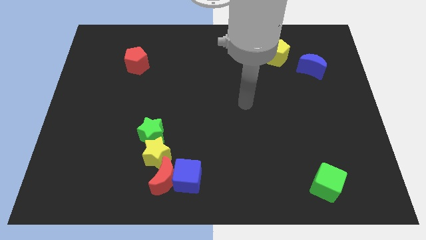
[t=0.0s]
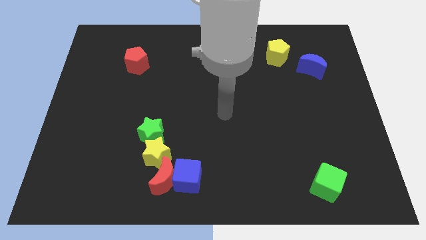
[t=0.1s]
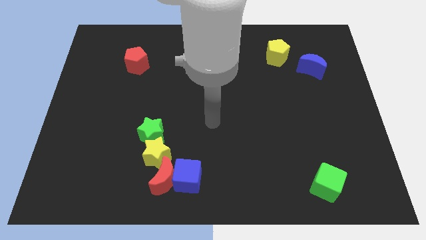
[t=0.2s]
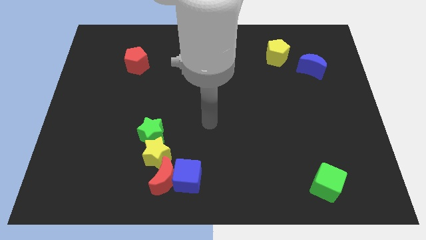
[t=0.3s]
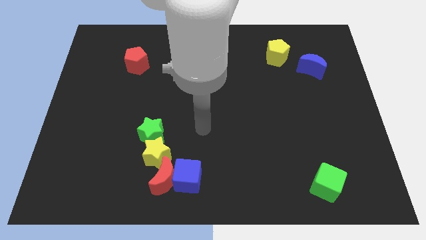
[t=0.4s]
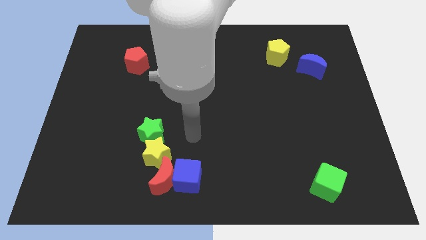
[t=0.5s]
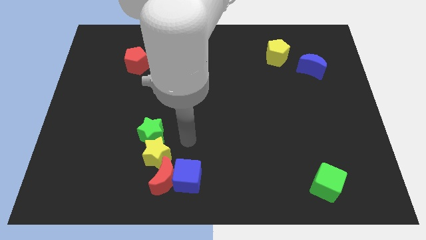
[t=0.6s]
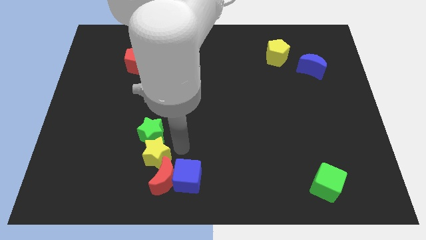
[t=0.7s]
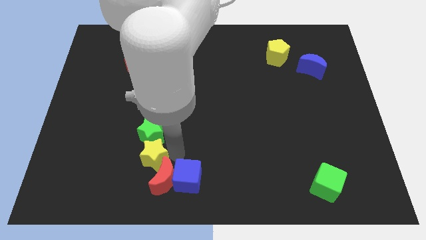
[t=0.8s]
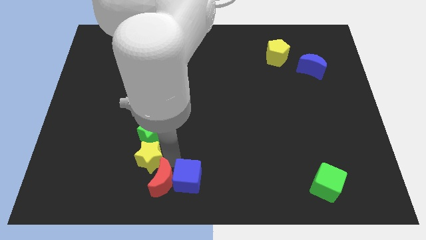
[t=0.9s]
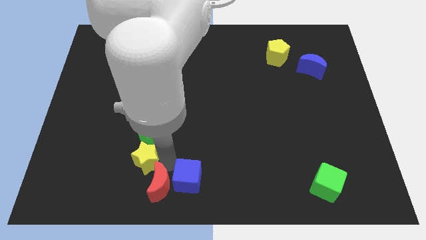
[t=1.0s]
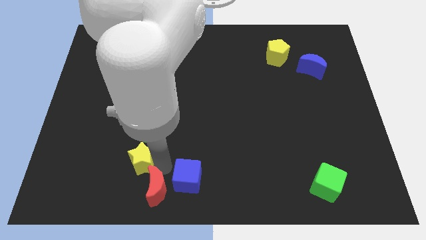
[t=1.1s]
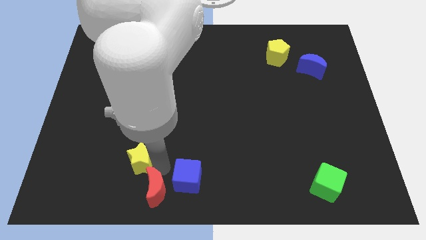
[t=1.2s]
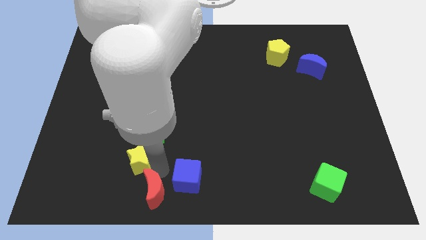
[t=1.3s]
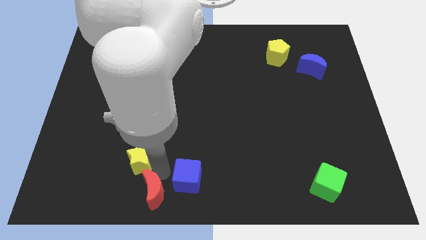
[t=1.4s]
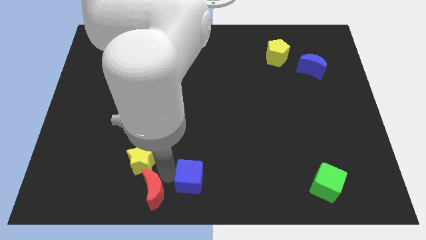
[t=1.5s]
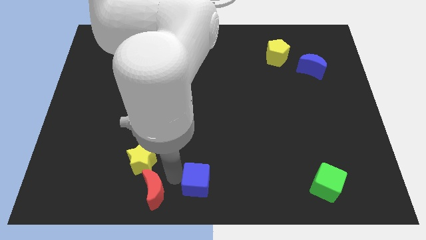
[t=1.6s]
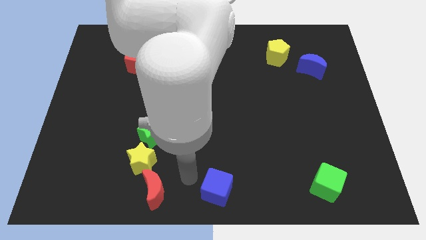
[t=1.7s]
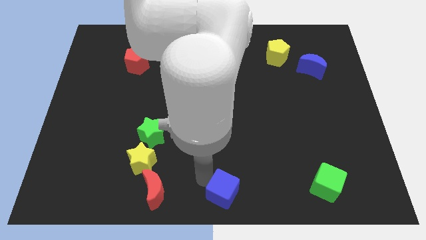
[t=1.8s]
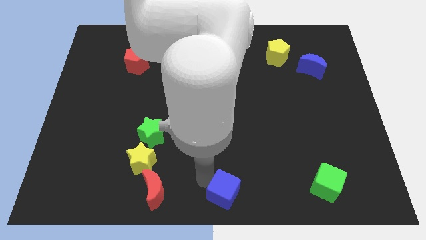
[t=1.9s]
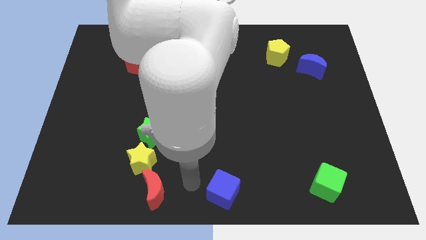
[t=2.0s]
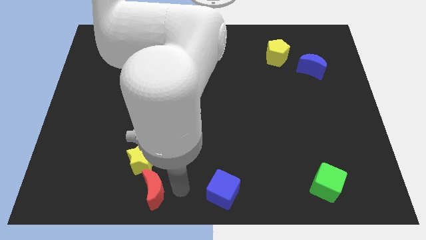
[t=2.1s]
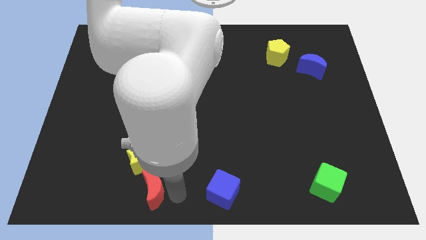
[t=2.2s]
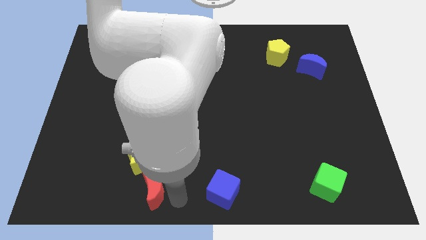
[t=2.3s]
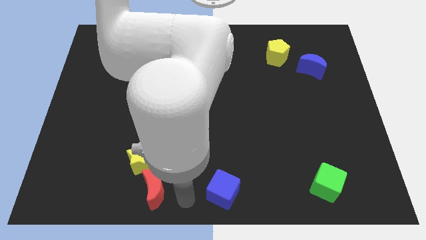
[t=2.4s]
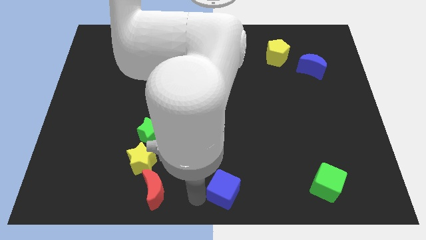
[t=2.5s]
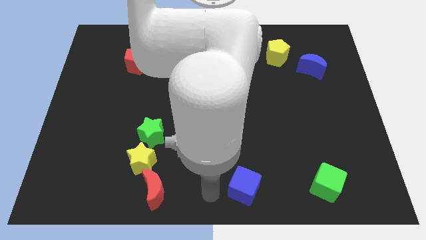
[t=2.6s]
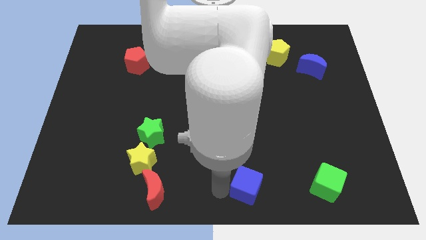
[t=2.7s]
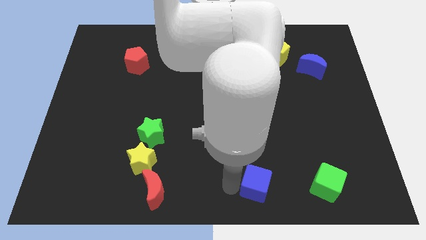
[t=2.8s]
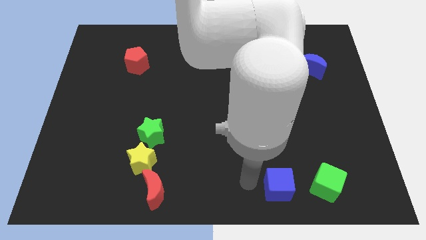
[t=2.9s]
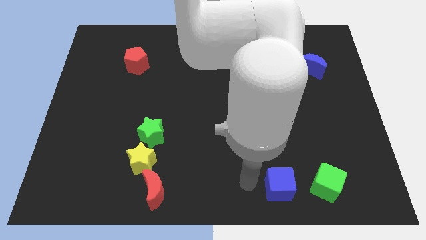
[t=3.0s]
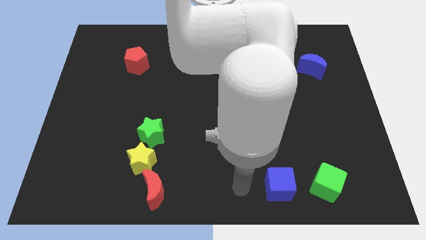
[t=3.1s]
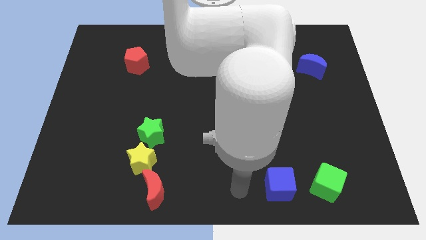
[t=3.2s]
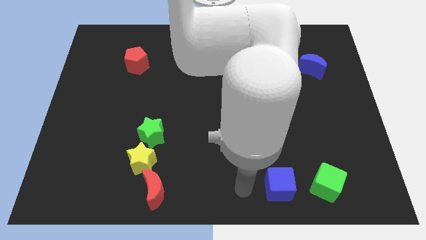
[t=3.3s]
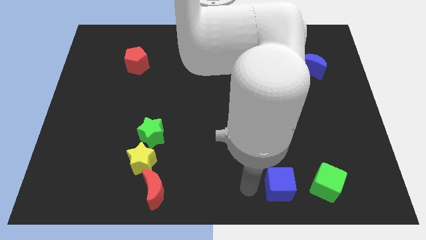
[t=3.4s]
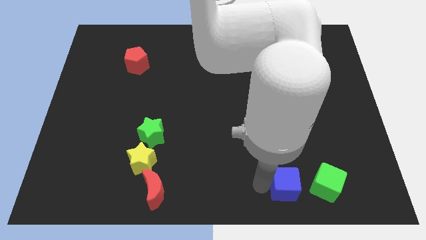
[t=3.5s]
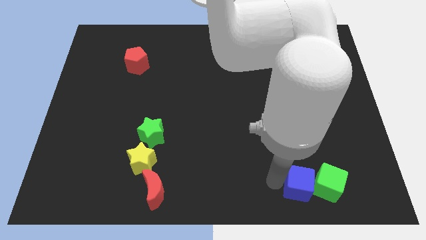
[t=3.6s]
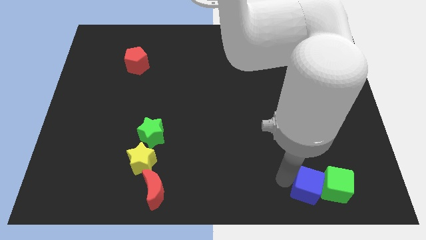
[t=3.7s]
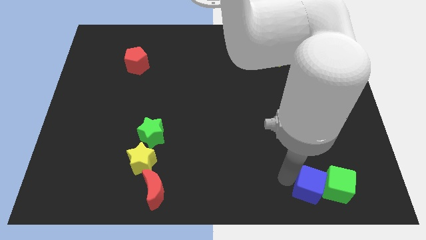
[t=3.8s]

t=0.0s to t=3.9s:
put the blue cube close to the green cube

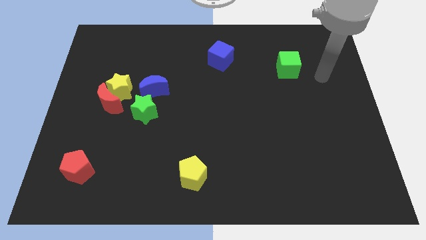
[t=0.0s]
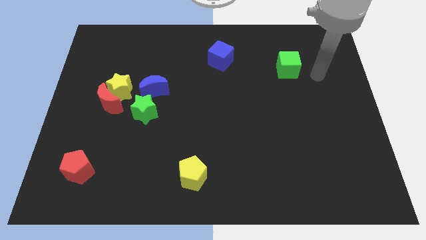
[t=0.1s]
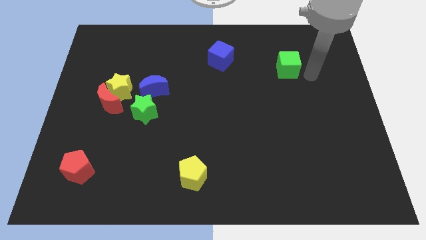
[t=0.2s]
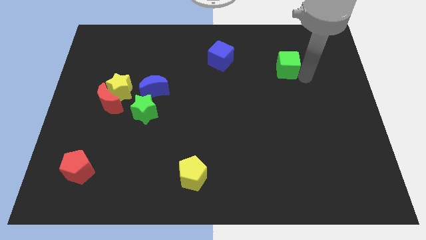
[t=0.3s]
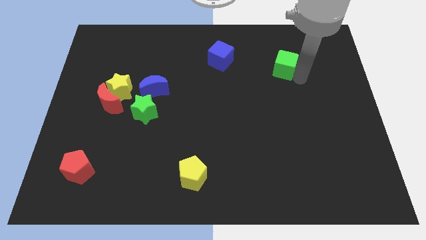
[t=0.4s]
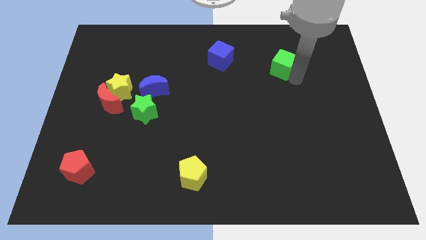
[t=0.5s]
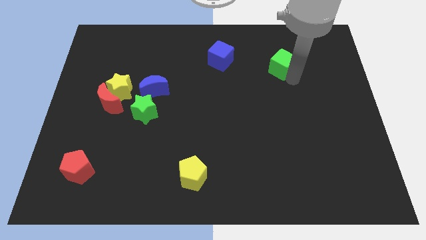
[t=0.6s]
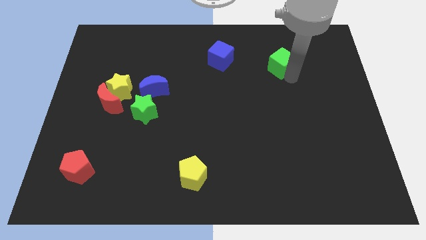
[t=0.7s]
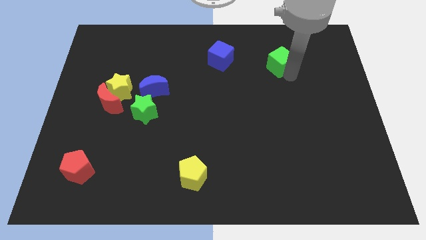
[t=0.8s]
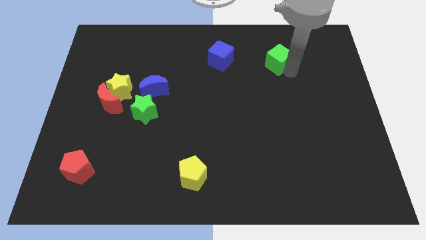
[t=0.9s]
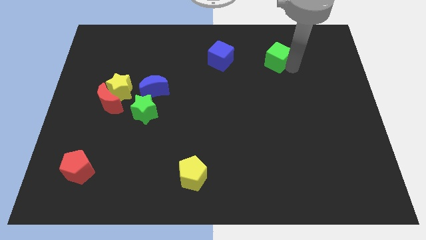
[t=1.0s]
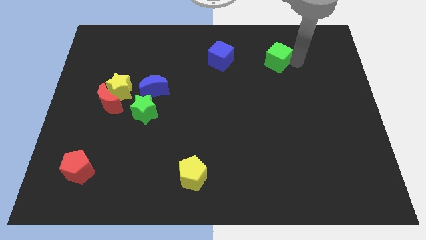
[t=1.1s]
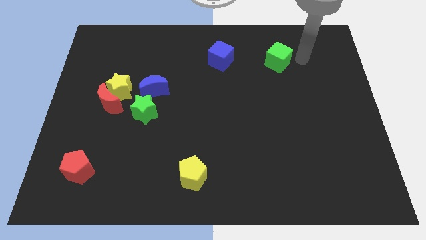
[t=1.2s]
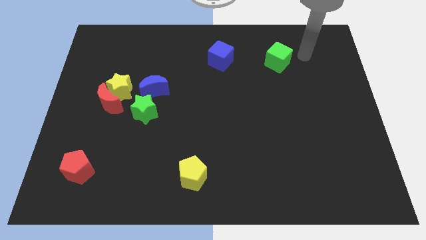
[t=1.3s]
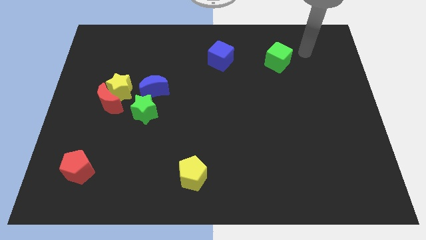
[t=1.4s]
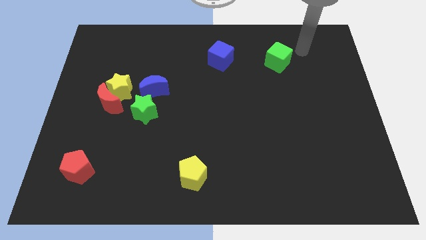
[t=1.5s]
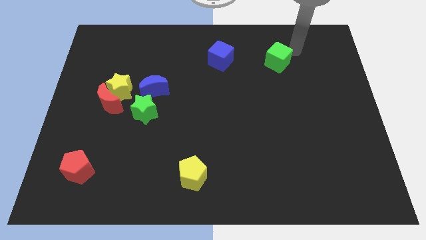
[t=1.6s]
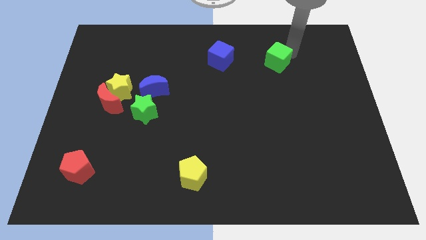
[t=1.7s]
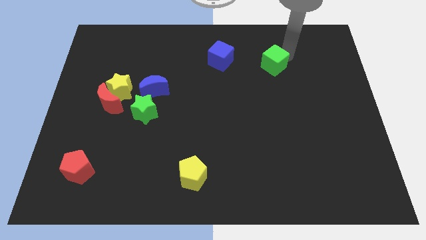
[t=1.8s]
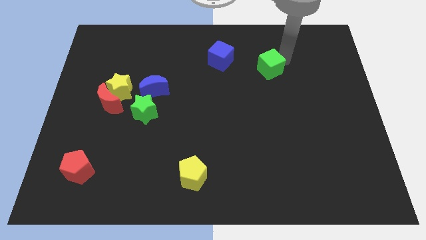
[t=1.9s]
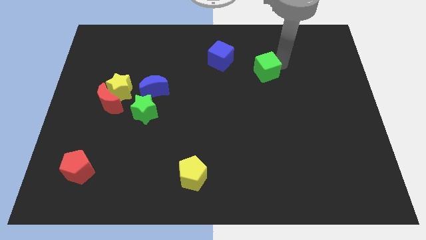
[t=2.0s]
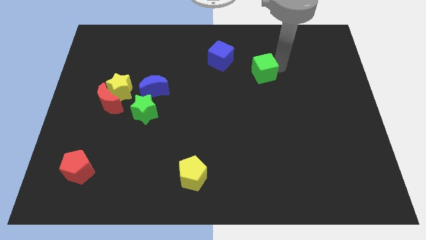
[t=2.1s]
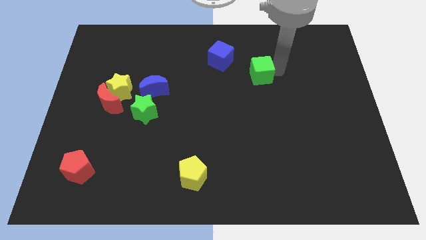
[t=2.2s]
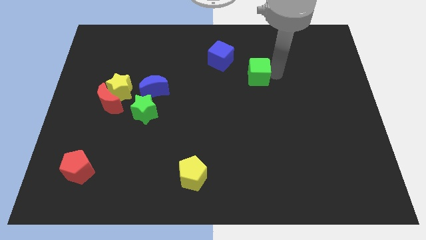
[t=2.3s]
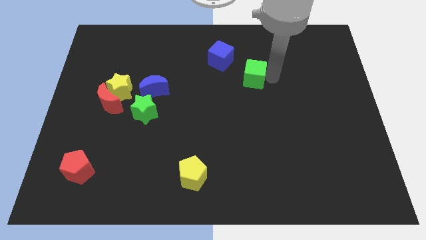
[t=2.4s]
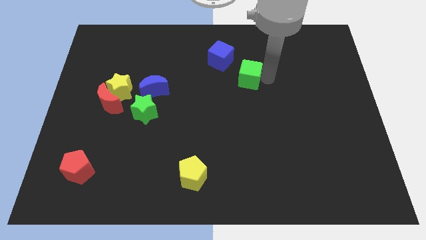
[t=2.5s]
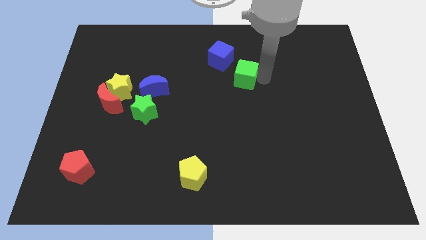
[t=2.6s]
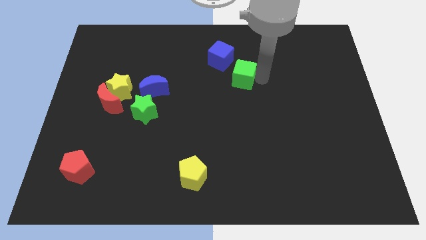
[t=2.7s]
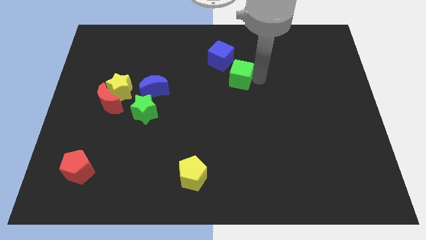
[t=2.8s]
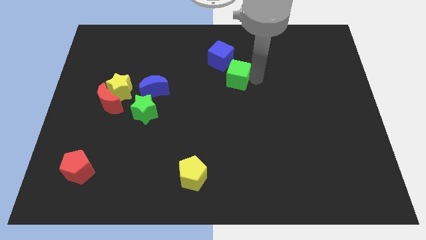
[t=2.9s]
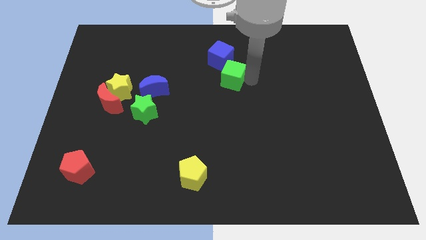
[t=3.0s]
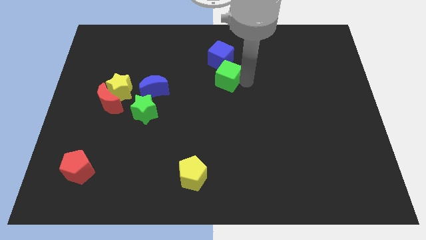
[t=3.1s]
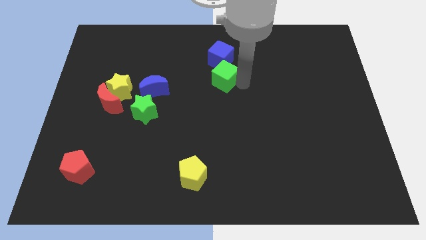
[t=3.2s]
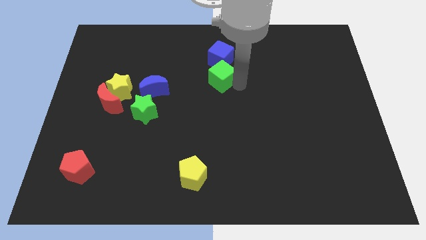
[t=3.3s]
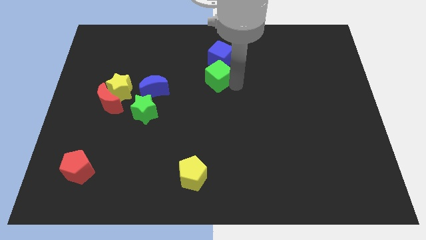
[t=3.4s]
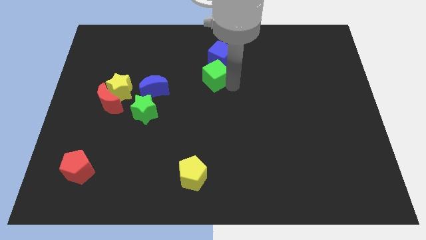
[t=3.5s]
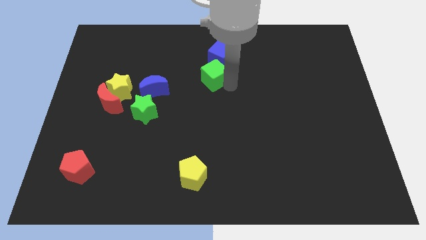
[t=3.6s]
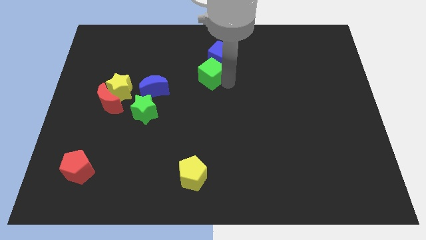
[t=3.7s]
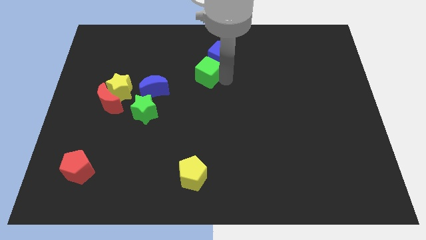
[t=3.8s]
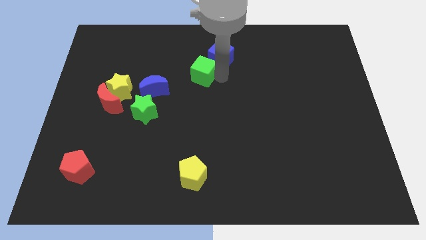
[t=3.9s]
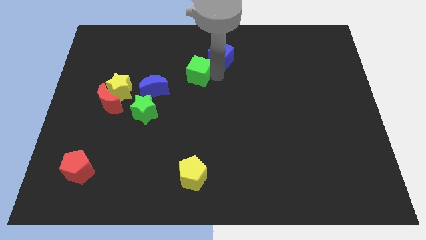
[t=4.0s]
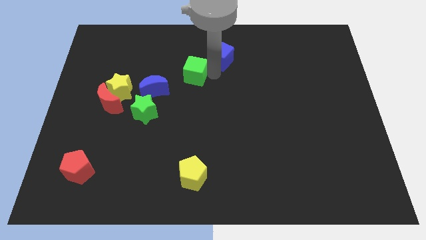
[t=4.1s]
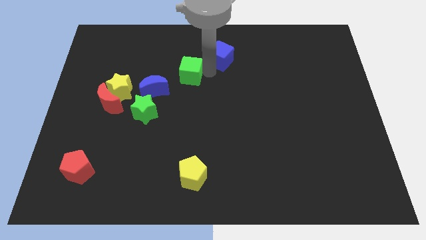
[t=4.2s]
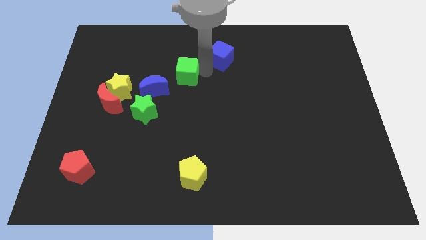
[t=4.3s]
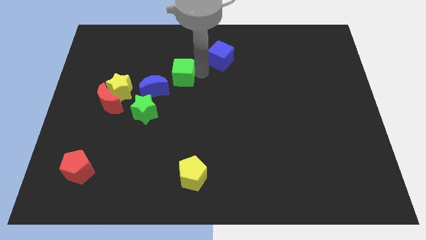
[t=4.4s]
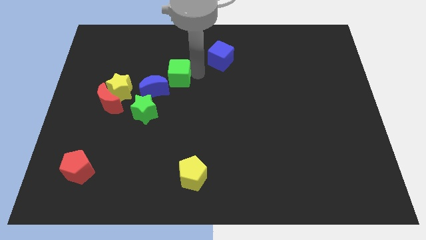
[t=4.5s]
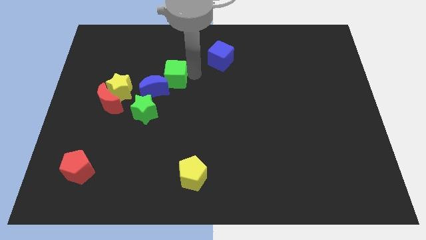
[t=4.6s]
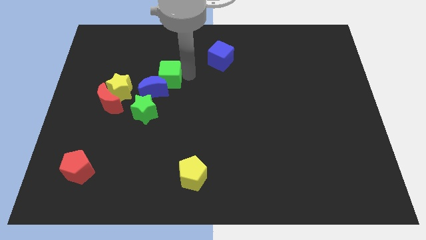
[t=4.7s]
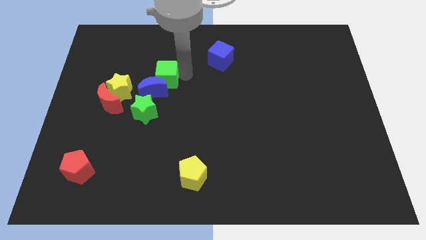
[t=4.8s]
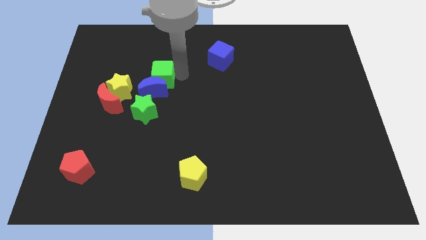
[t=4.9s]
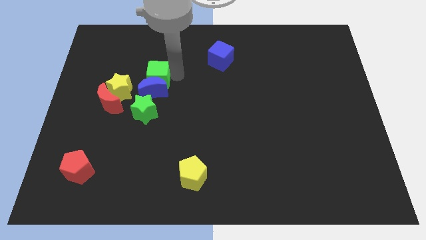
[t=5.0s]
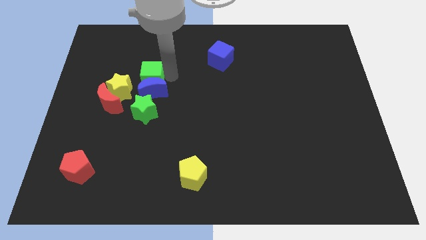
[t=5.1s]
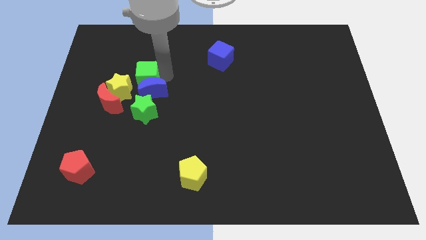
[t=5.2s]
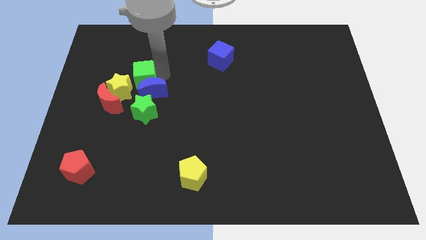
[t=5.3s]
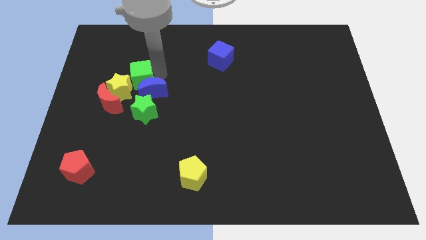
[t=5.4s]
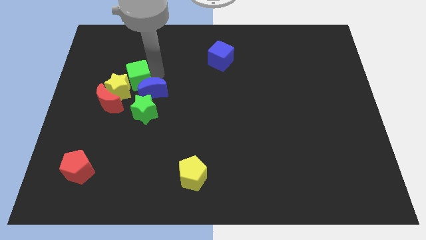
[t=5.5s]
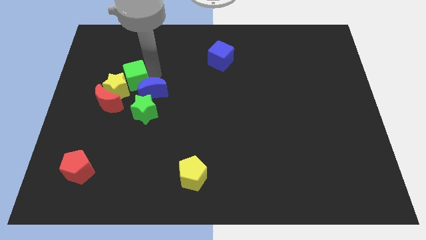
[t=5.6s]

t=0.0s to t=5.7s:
move the green cube to the yellow star
